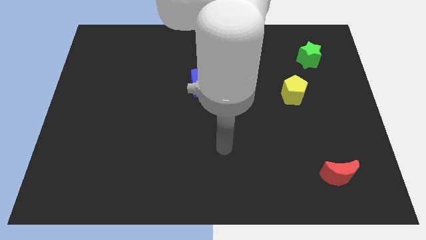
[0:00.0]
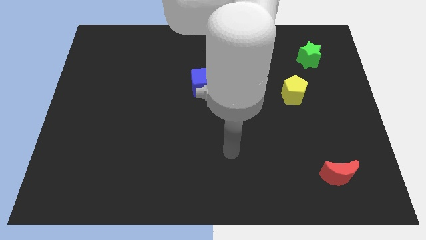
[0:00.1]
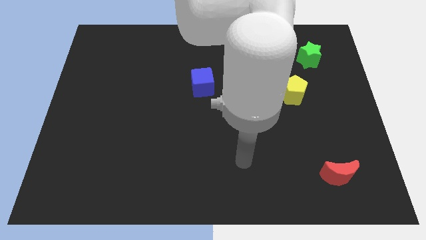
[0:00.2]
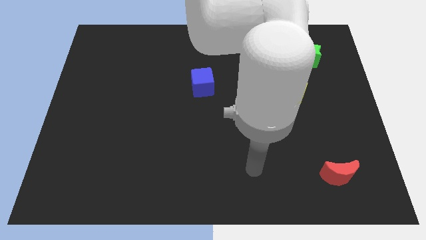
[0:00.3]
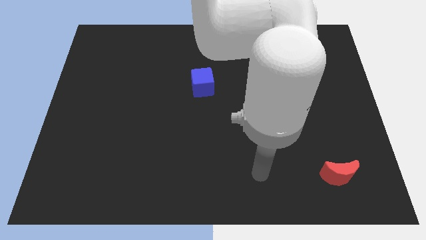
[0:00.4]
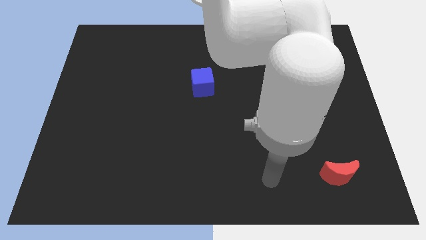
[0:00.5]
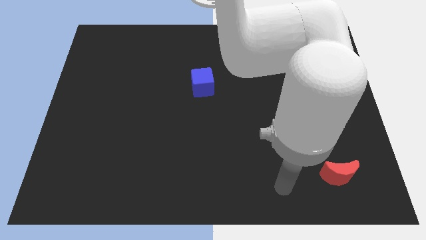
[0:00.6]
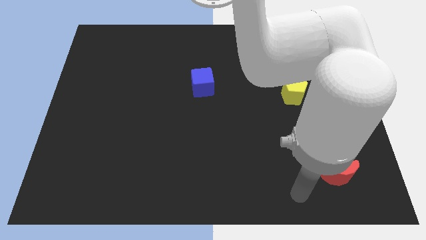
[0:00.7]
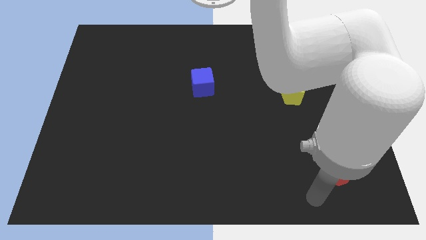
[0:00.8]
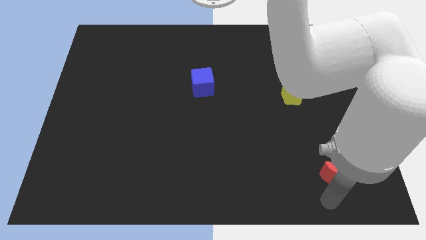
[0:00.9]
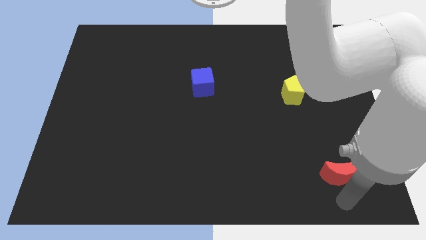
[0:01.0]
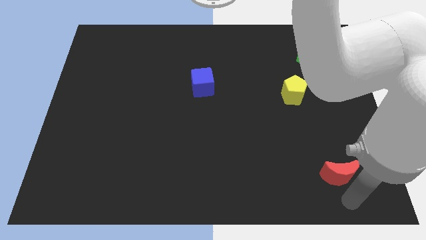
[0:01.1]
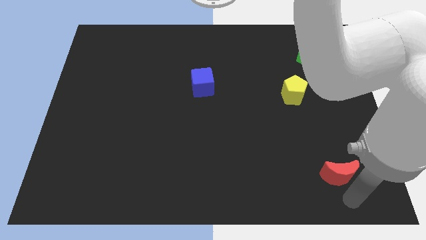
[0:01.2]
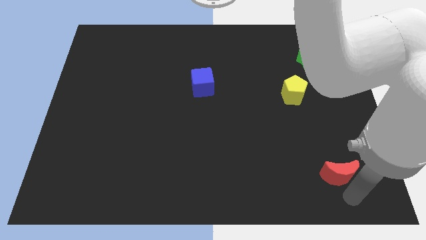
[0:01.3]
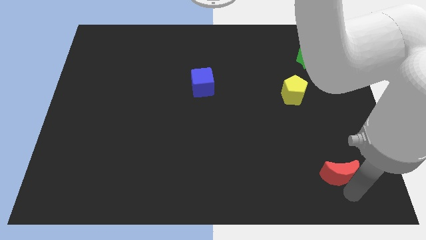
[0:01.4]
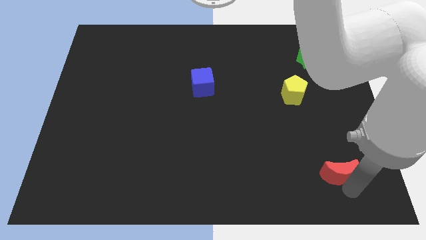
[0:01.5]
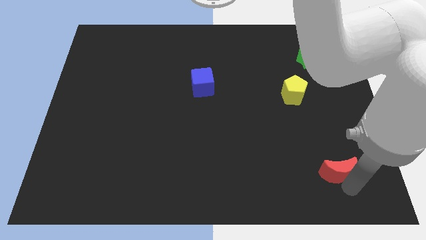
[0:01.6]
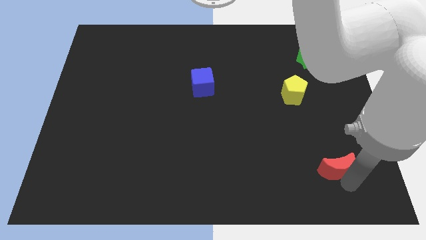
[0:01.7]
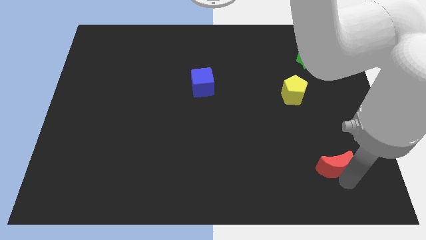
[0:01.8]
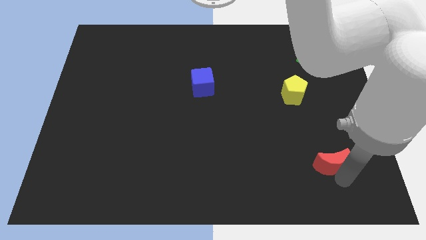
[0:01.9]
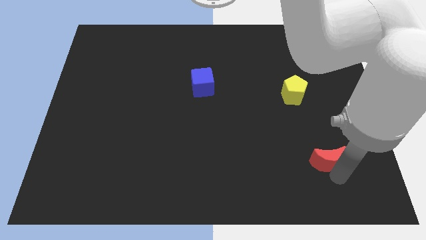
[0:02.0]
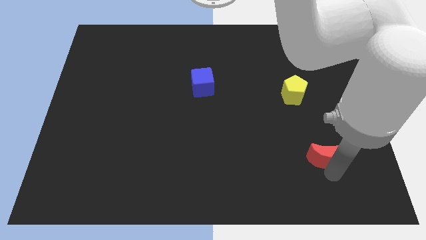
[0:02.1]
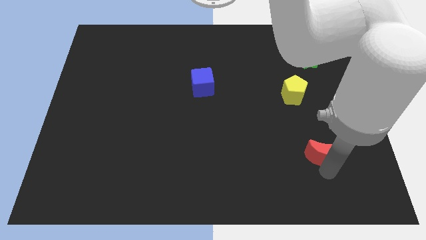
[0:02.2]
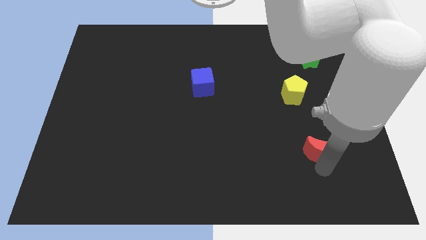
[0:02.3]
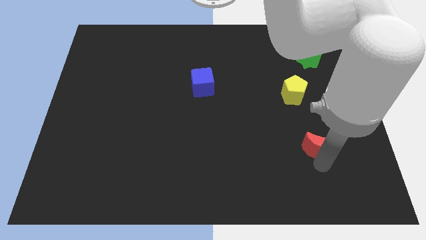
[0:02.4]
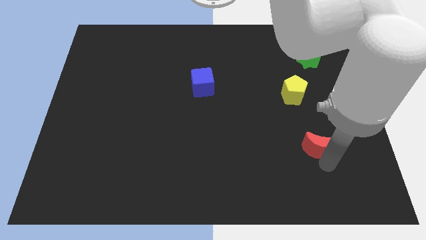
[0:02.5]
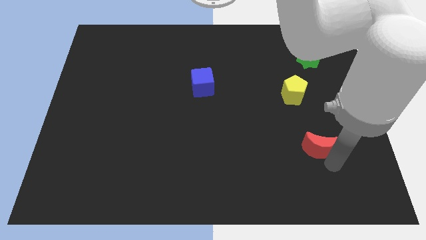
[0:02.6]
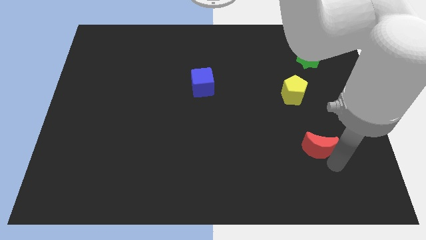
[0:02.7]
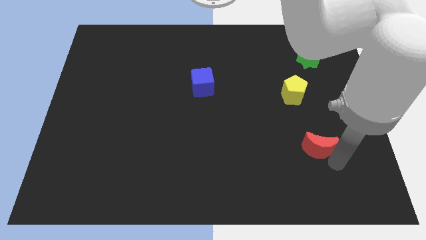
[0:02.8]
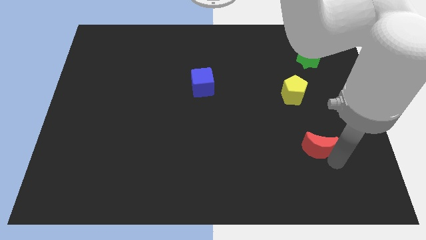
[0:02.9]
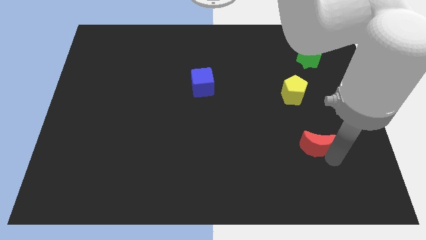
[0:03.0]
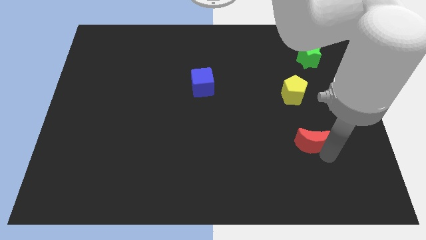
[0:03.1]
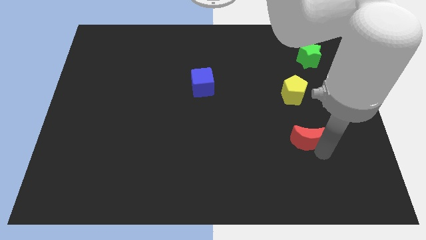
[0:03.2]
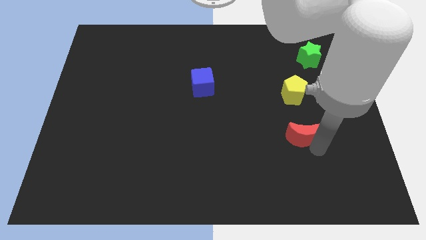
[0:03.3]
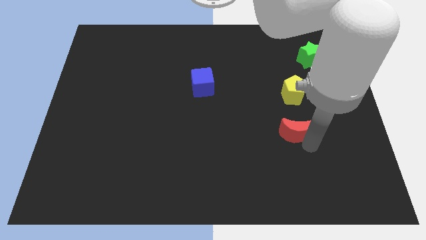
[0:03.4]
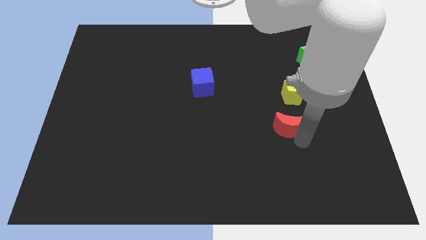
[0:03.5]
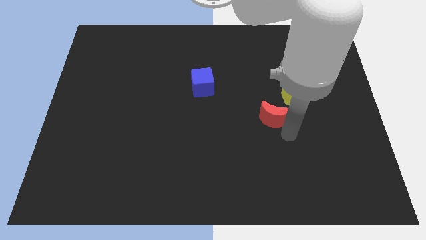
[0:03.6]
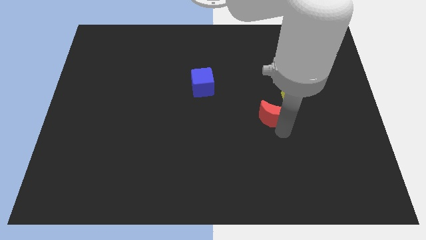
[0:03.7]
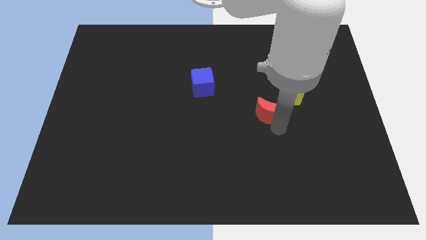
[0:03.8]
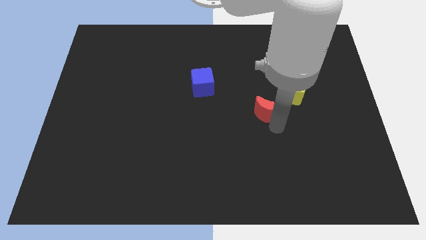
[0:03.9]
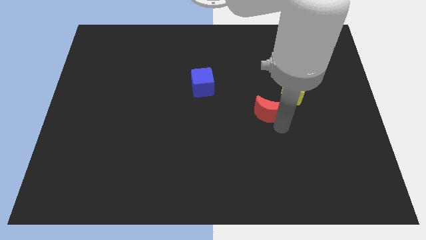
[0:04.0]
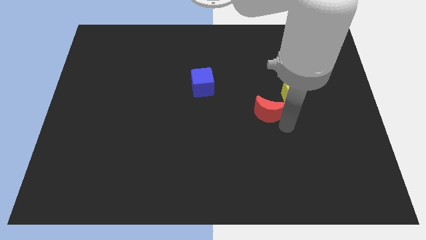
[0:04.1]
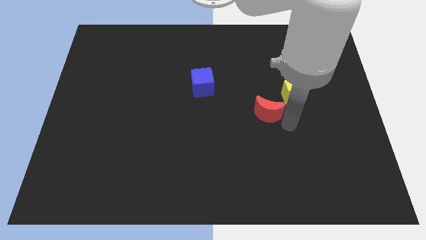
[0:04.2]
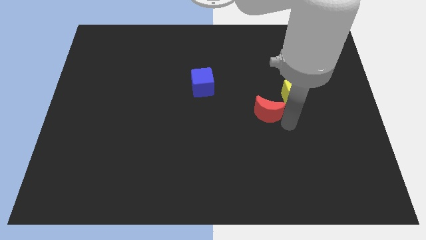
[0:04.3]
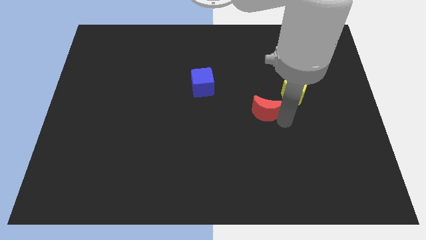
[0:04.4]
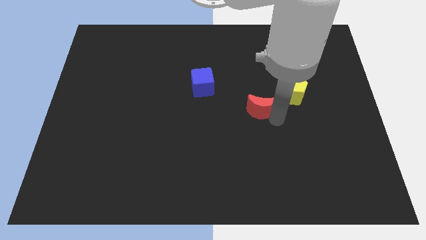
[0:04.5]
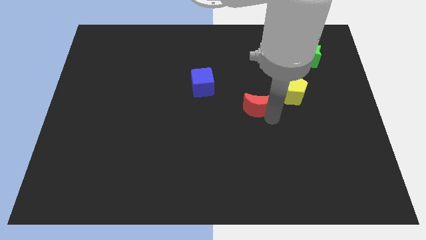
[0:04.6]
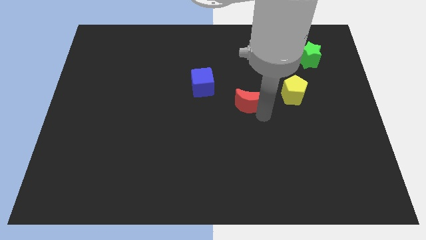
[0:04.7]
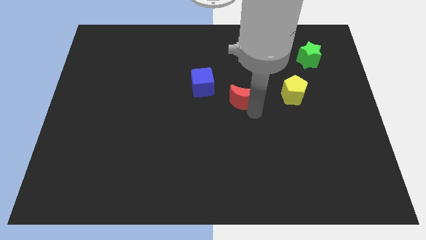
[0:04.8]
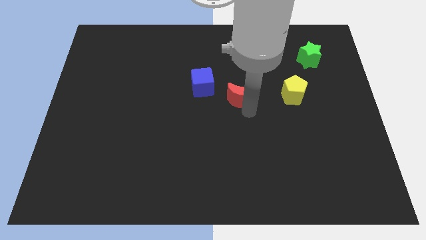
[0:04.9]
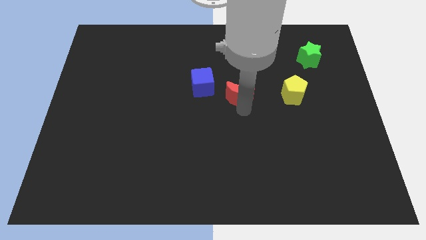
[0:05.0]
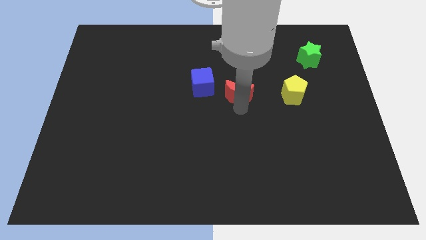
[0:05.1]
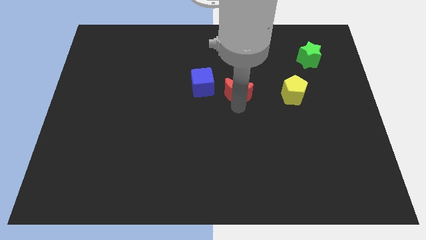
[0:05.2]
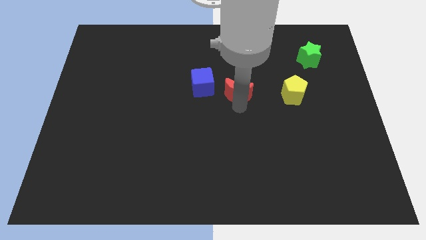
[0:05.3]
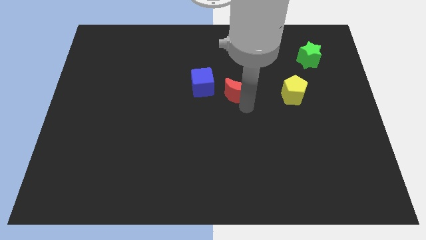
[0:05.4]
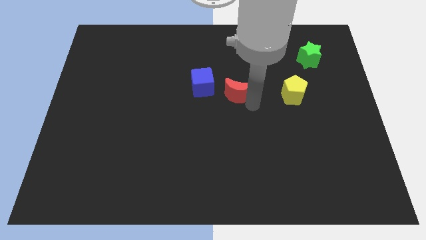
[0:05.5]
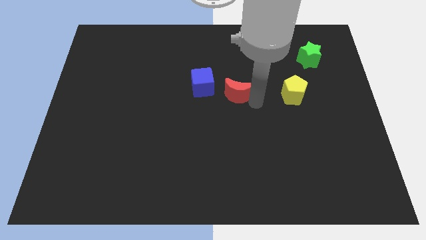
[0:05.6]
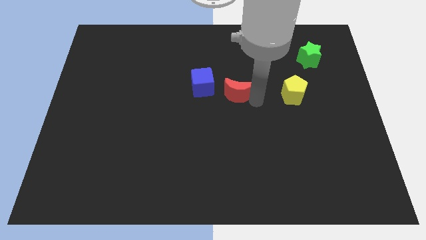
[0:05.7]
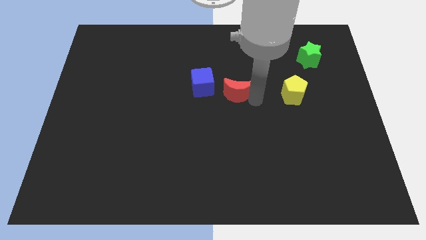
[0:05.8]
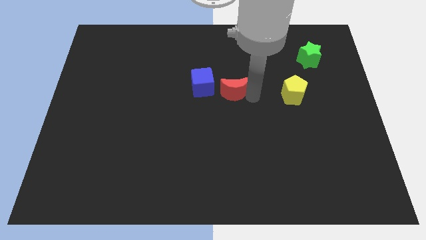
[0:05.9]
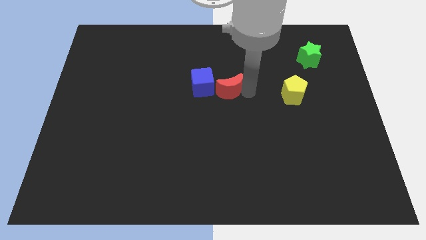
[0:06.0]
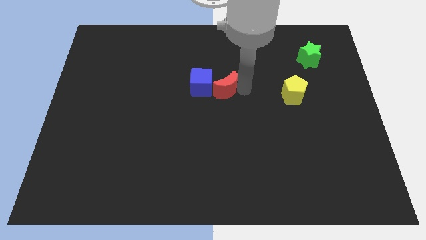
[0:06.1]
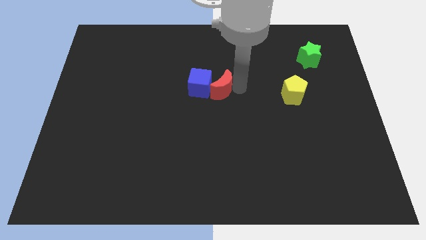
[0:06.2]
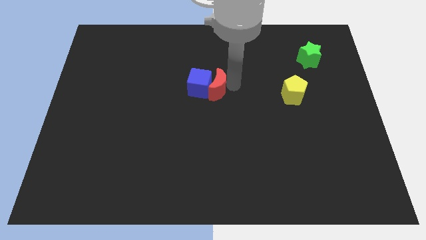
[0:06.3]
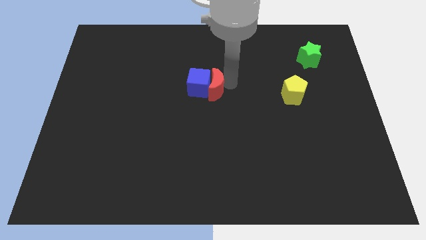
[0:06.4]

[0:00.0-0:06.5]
push the red moon towards the blue block

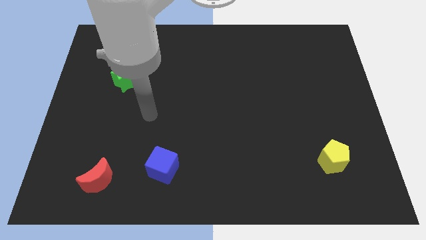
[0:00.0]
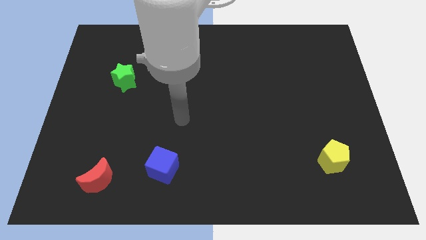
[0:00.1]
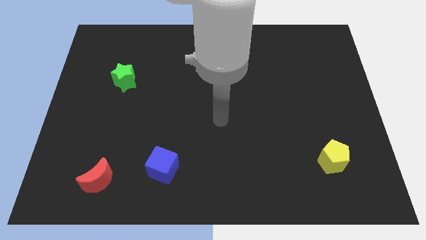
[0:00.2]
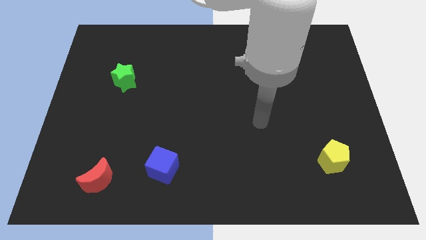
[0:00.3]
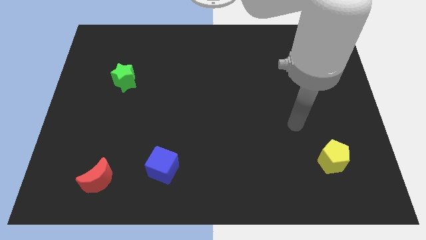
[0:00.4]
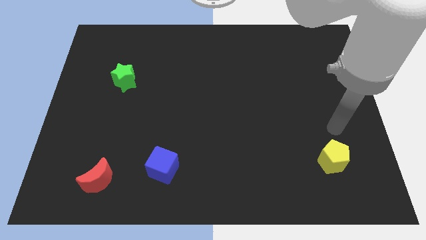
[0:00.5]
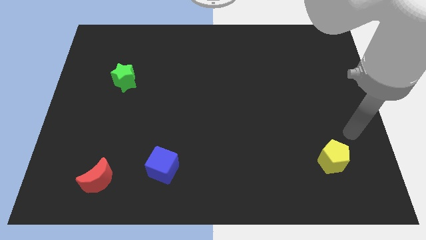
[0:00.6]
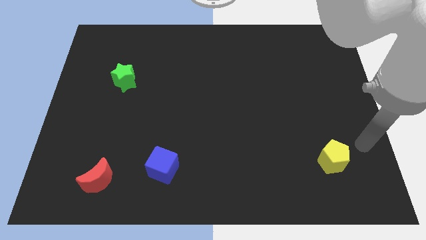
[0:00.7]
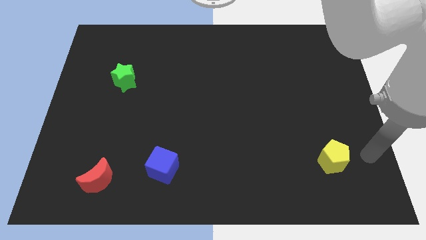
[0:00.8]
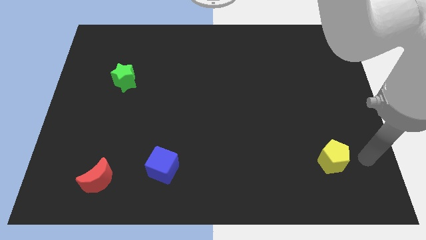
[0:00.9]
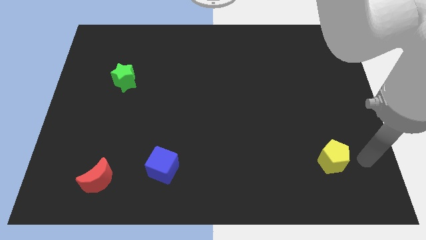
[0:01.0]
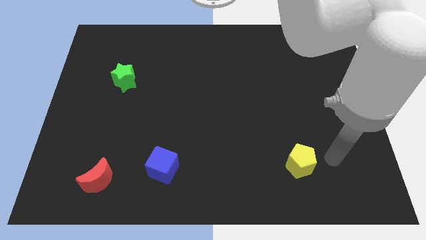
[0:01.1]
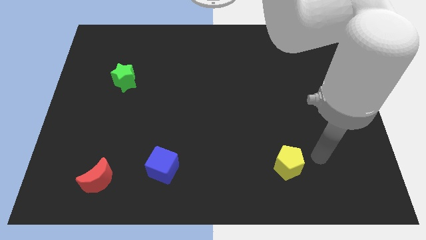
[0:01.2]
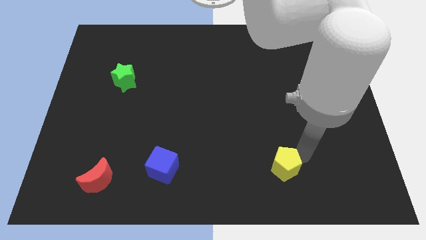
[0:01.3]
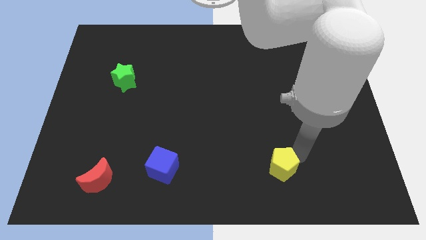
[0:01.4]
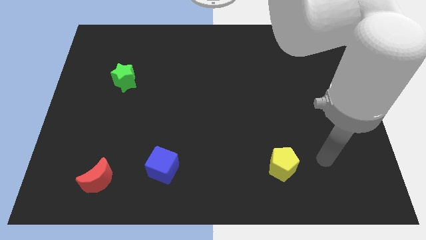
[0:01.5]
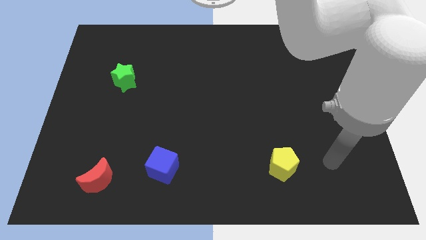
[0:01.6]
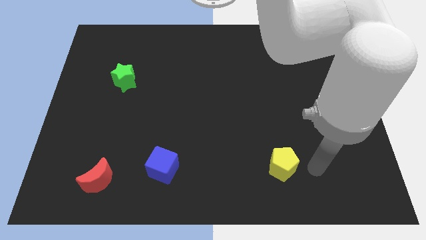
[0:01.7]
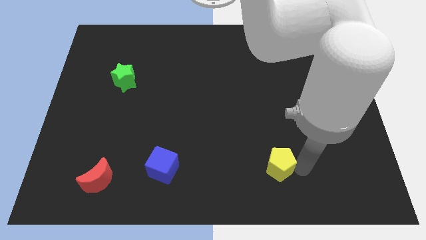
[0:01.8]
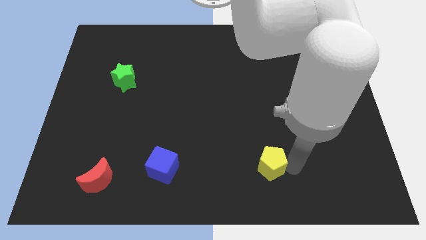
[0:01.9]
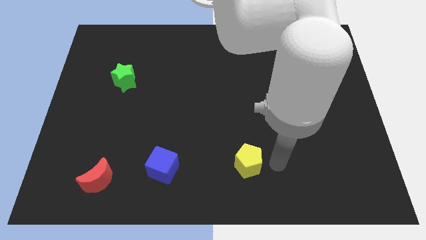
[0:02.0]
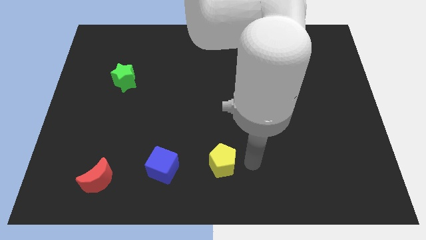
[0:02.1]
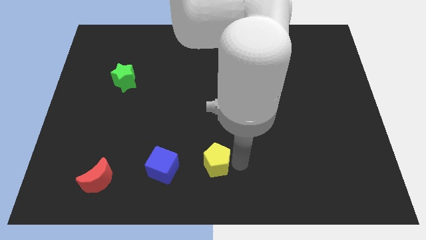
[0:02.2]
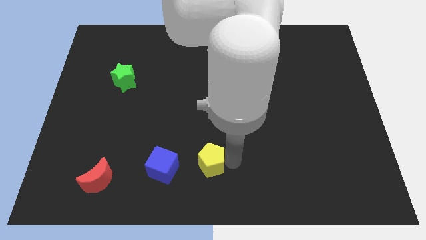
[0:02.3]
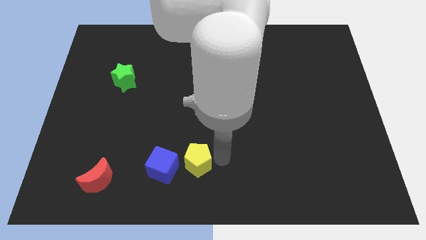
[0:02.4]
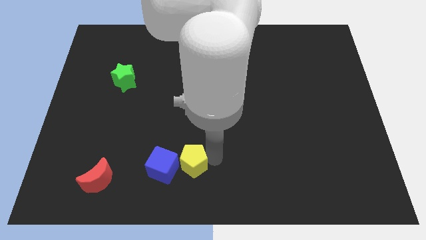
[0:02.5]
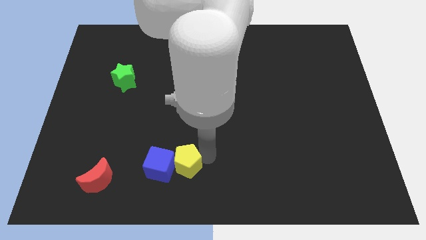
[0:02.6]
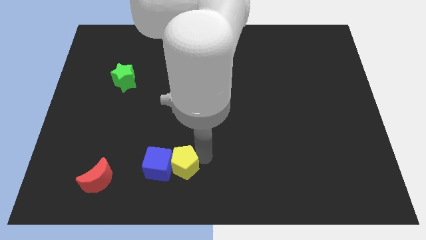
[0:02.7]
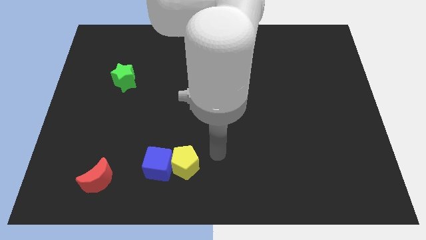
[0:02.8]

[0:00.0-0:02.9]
push the yellow pentagon towards the cube
